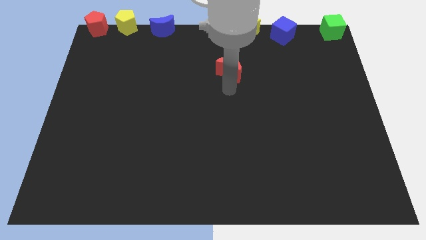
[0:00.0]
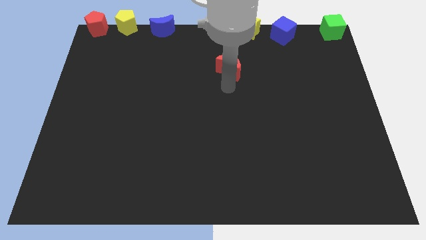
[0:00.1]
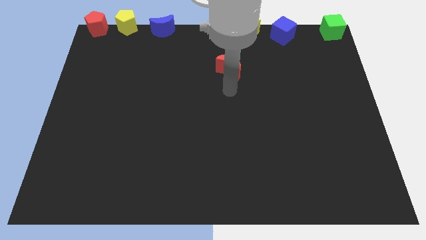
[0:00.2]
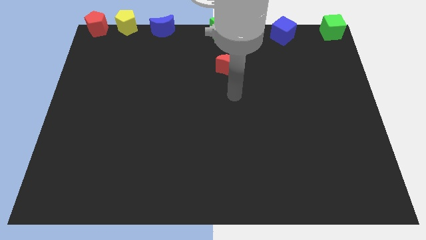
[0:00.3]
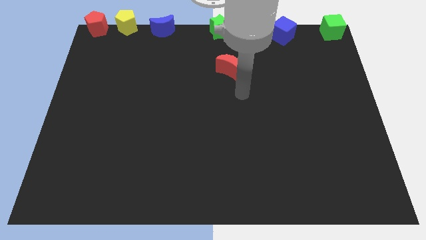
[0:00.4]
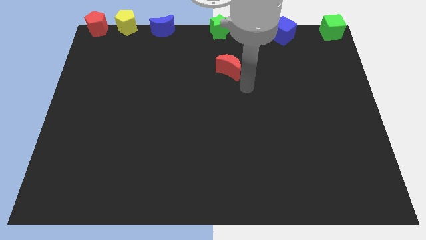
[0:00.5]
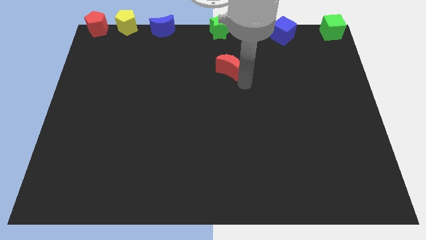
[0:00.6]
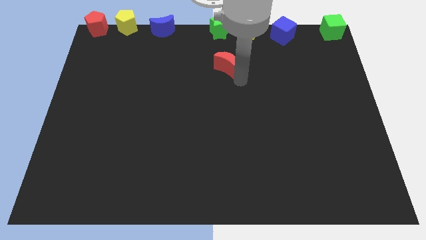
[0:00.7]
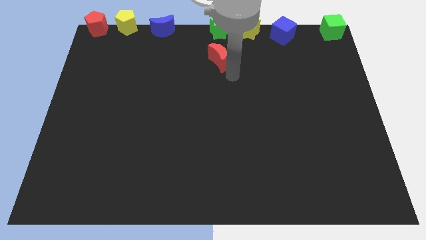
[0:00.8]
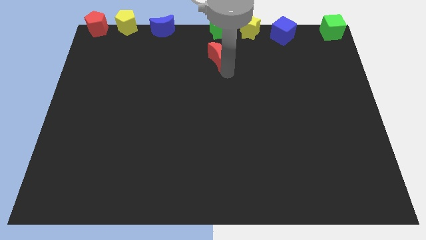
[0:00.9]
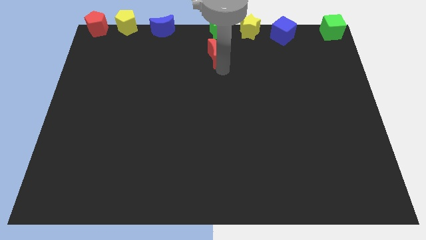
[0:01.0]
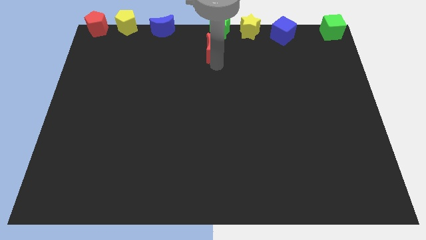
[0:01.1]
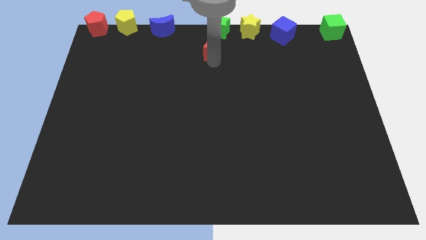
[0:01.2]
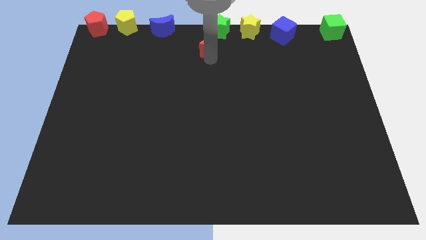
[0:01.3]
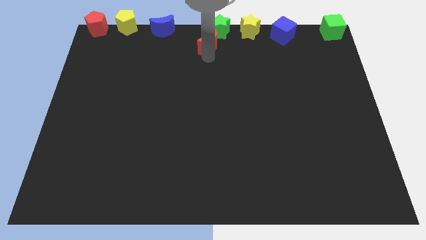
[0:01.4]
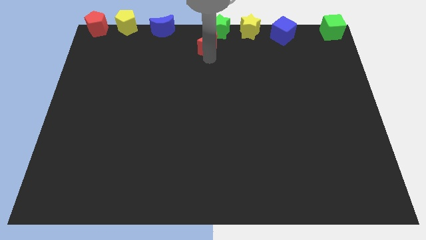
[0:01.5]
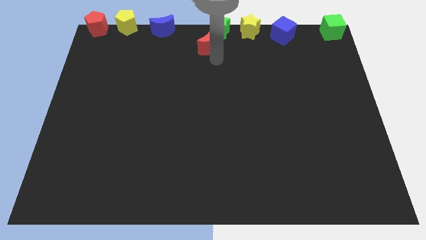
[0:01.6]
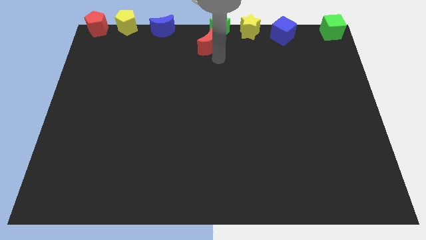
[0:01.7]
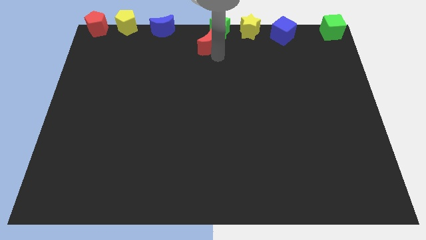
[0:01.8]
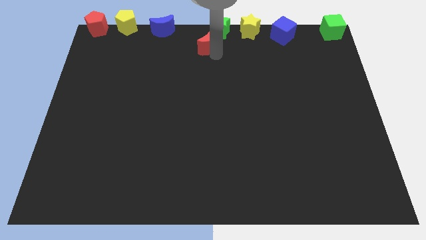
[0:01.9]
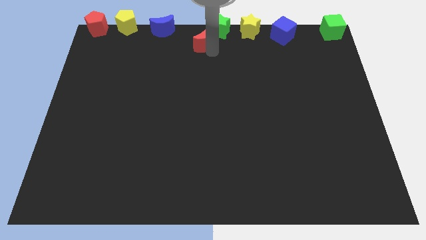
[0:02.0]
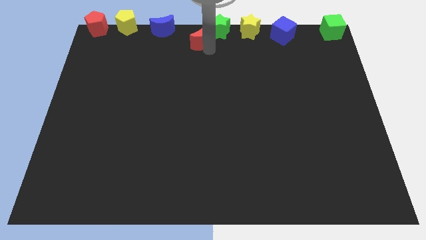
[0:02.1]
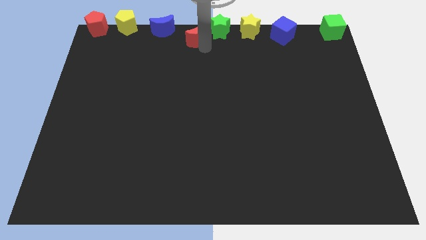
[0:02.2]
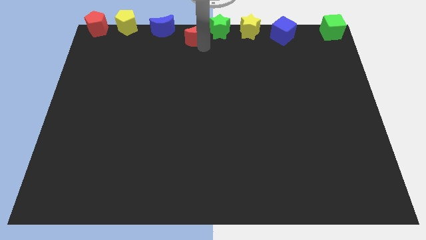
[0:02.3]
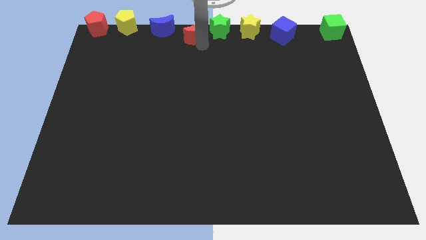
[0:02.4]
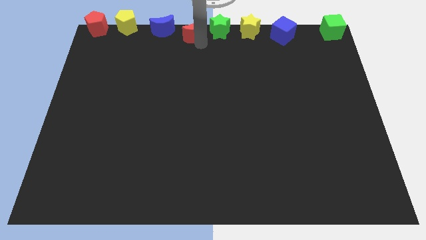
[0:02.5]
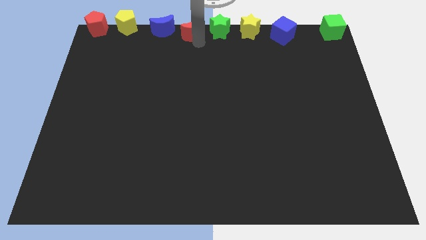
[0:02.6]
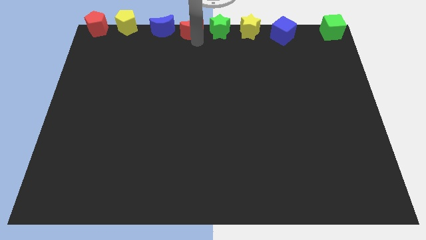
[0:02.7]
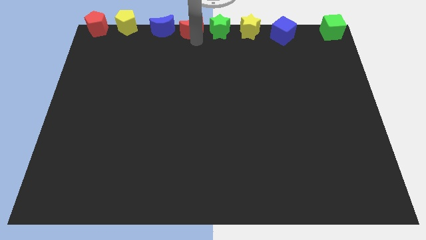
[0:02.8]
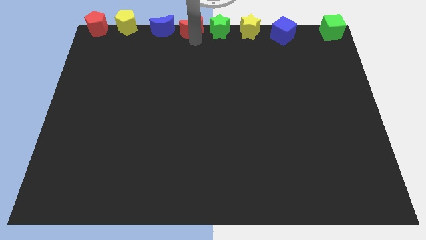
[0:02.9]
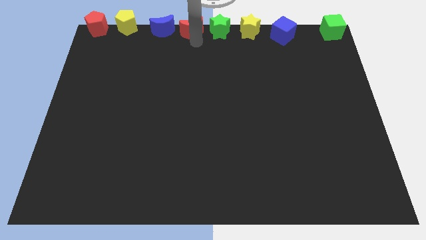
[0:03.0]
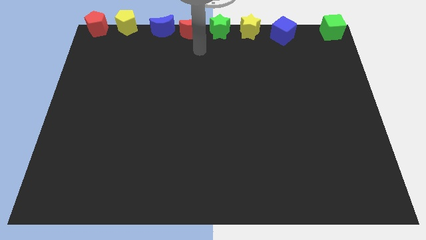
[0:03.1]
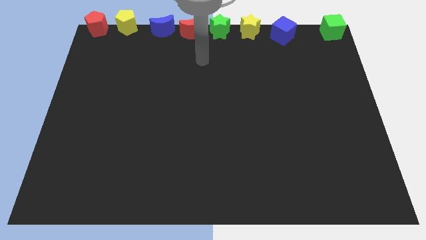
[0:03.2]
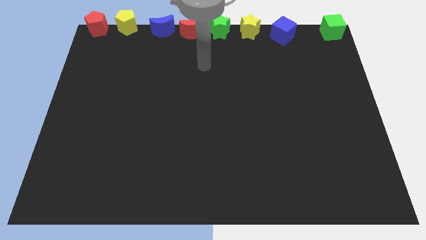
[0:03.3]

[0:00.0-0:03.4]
move red moon between blue moon and green star

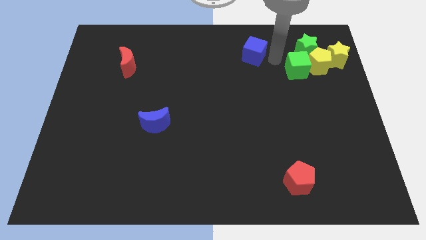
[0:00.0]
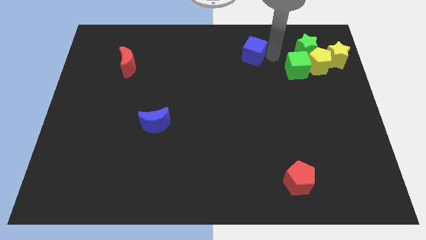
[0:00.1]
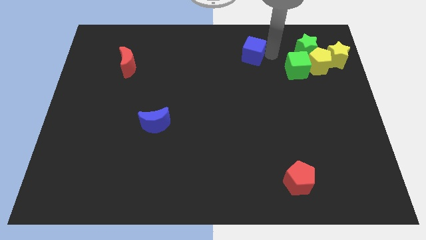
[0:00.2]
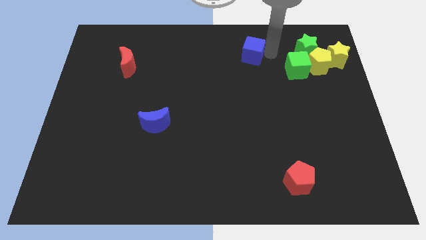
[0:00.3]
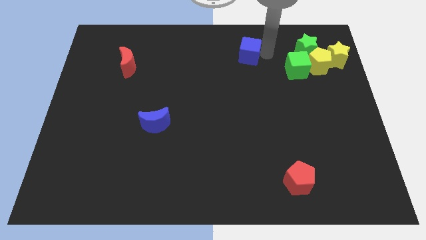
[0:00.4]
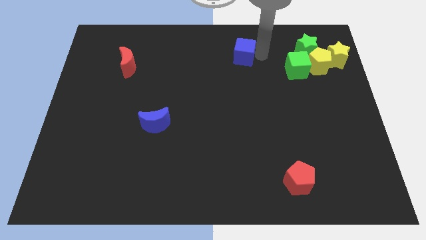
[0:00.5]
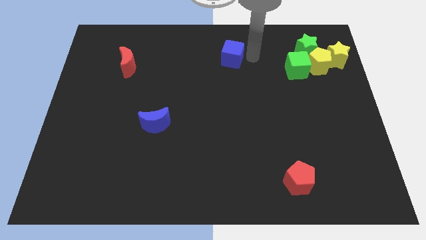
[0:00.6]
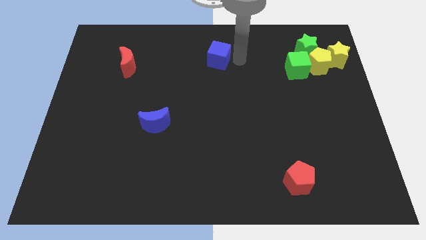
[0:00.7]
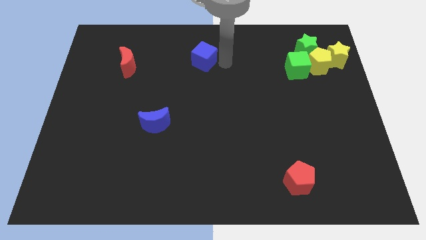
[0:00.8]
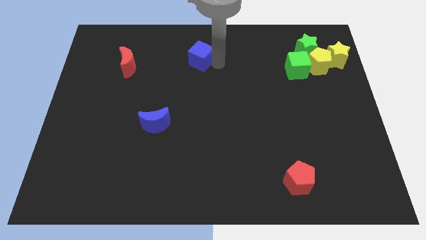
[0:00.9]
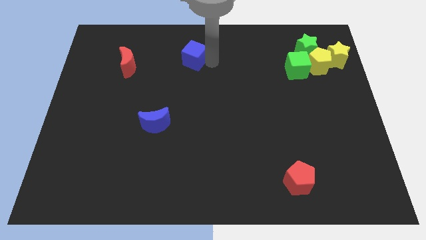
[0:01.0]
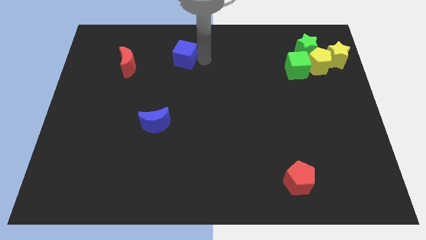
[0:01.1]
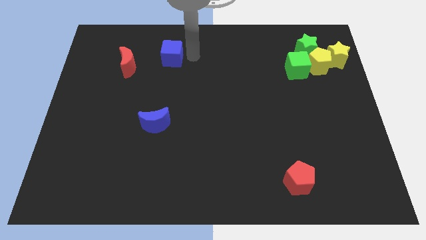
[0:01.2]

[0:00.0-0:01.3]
drag the blue cube diagonally on the top right side of the blue crescent

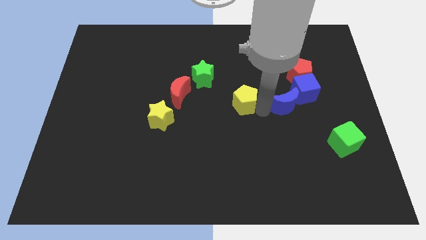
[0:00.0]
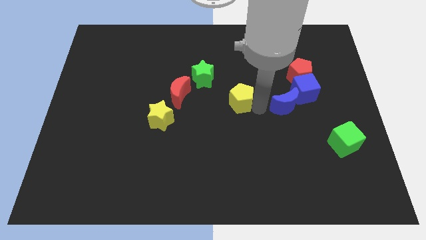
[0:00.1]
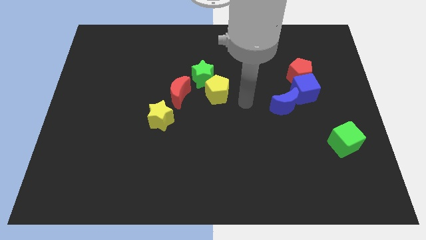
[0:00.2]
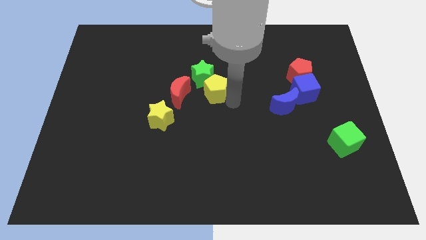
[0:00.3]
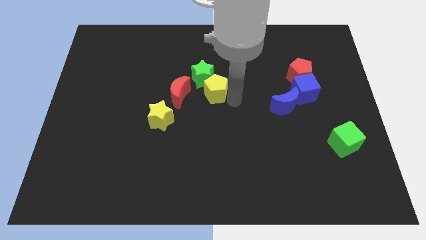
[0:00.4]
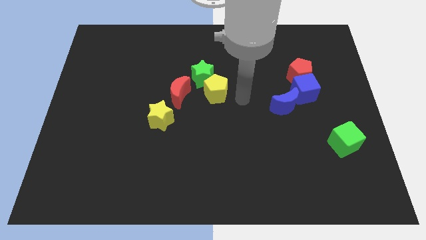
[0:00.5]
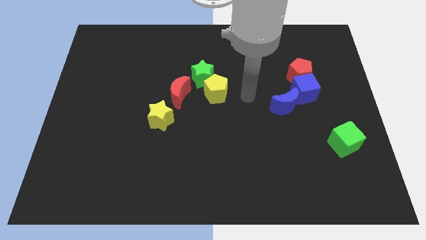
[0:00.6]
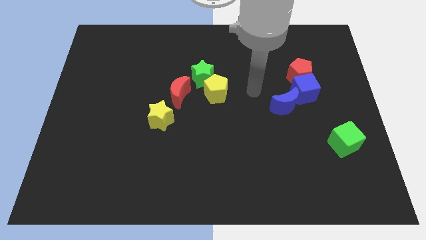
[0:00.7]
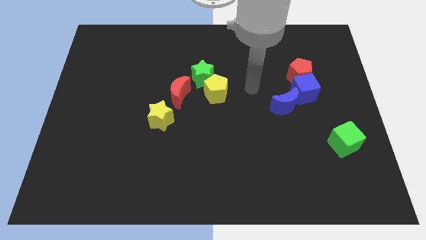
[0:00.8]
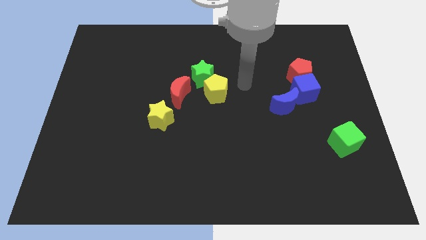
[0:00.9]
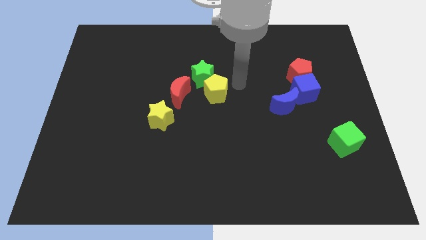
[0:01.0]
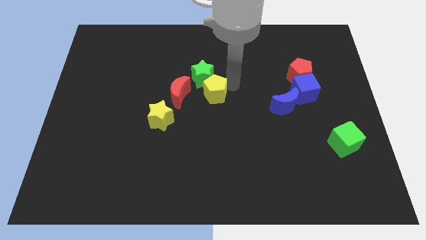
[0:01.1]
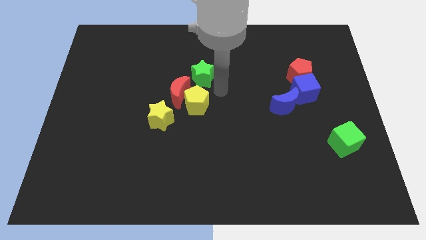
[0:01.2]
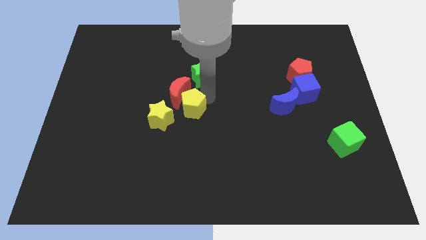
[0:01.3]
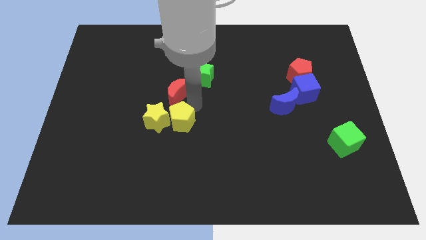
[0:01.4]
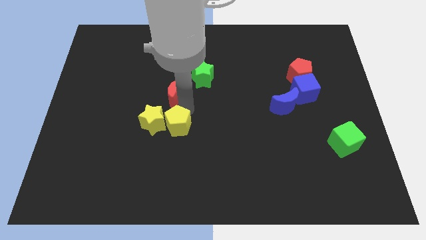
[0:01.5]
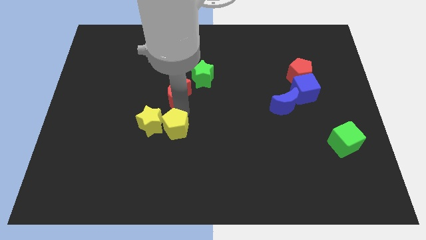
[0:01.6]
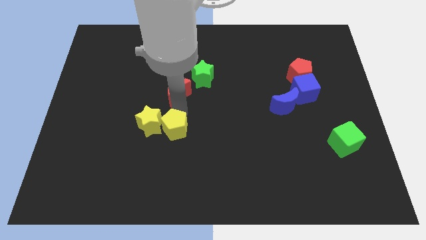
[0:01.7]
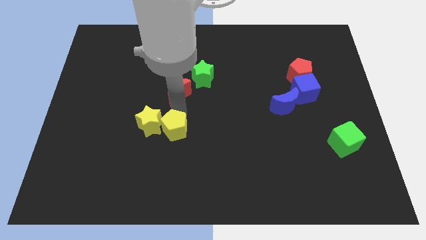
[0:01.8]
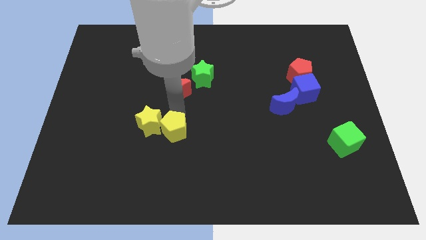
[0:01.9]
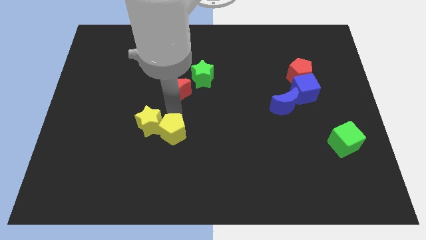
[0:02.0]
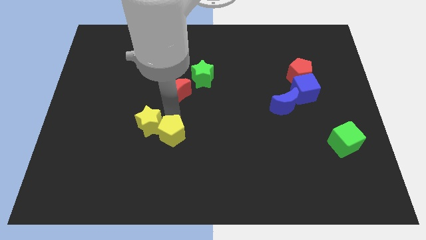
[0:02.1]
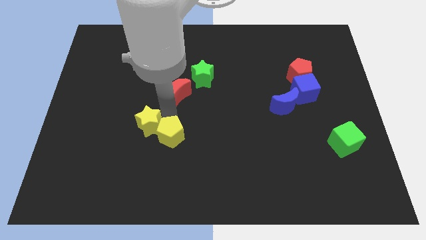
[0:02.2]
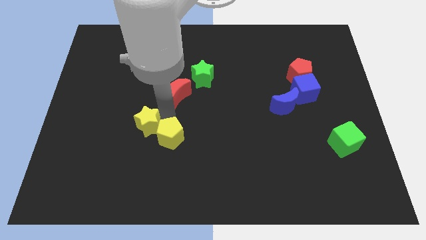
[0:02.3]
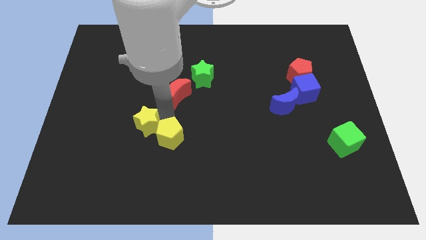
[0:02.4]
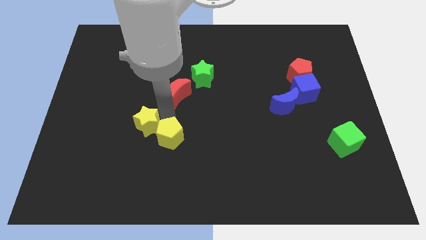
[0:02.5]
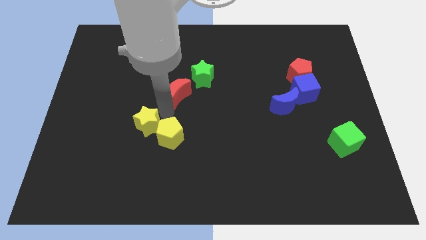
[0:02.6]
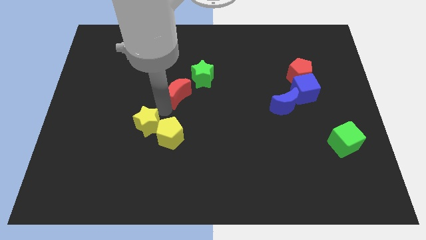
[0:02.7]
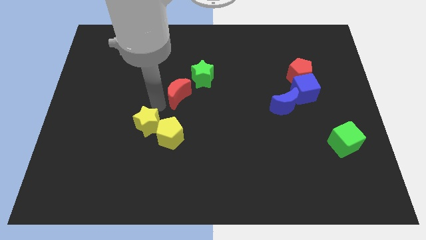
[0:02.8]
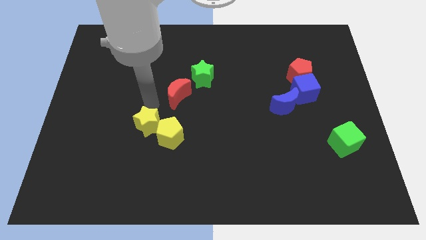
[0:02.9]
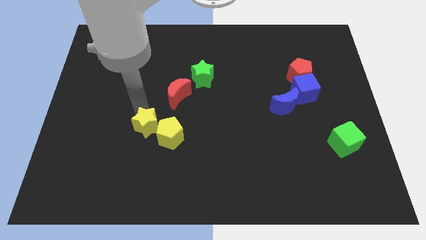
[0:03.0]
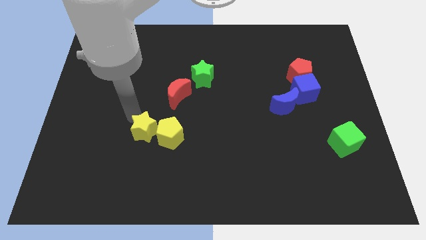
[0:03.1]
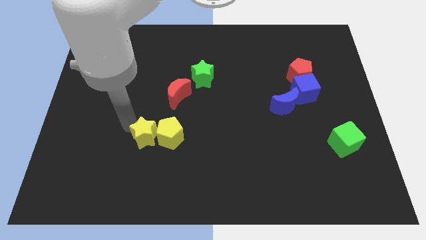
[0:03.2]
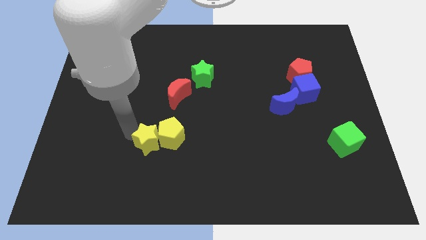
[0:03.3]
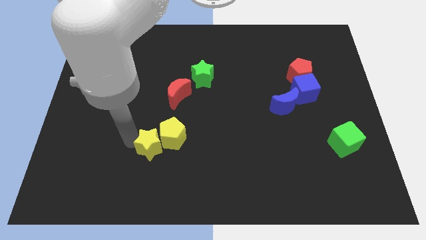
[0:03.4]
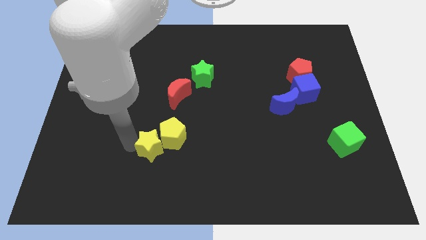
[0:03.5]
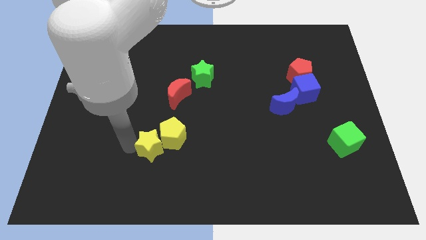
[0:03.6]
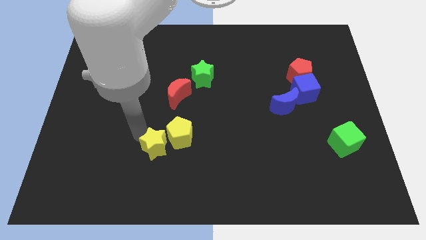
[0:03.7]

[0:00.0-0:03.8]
push the yellow pentagon into the yellow star

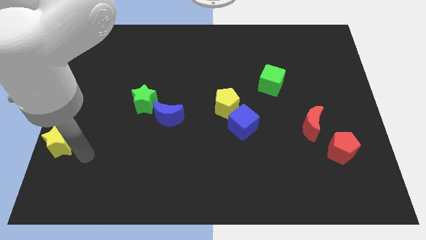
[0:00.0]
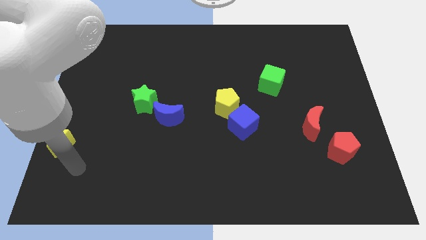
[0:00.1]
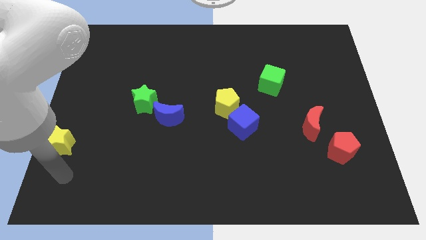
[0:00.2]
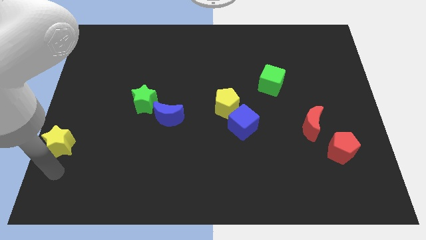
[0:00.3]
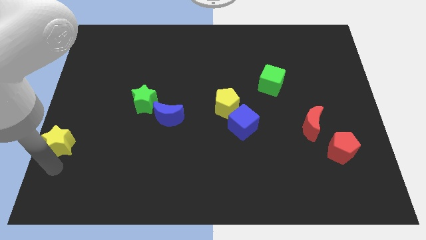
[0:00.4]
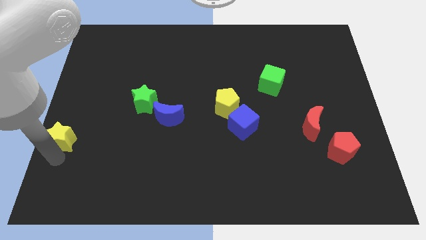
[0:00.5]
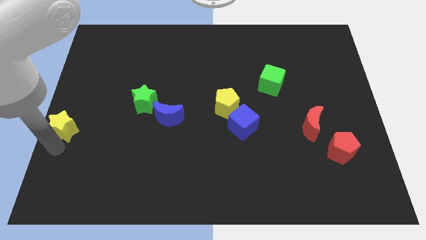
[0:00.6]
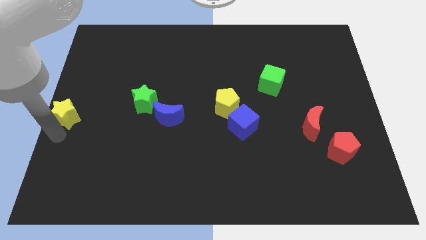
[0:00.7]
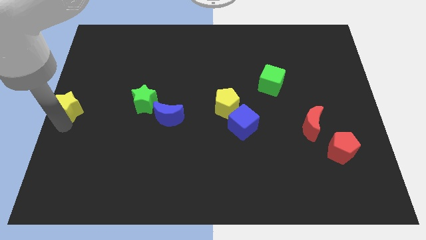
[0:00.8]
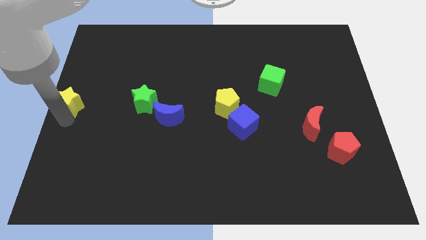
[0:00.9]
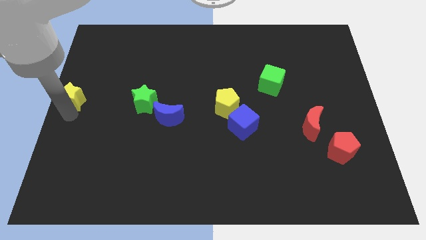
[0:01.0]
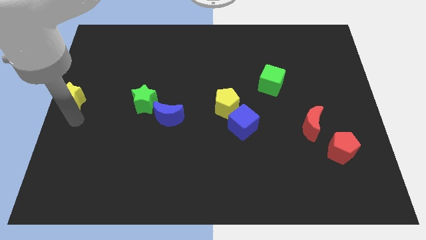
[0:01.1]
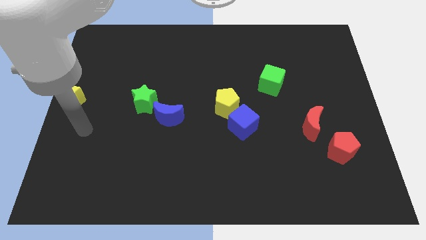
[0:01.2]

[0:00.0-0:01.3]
move the yellow star to the left side of the green star
